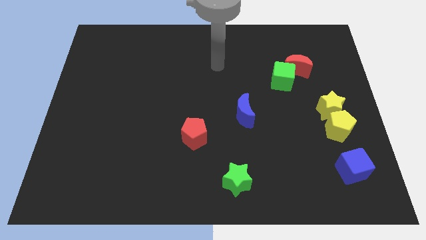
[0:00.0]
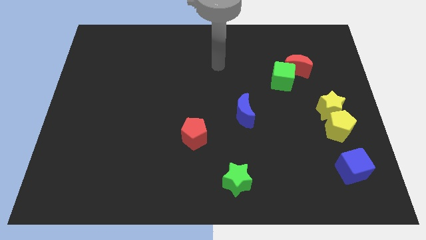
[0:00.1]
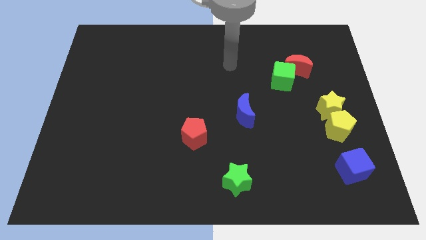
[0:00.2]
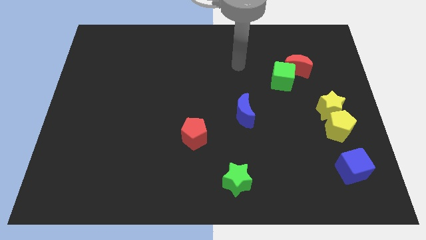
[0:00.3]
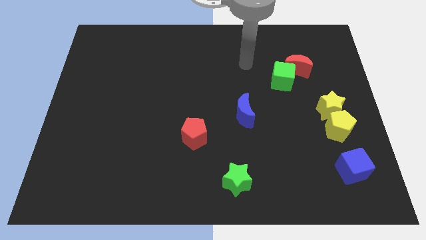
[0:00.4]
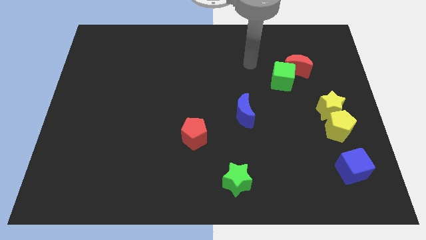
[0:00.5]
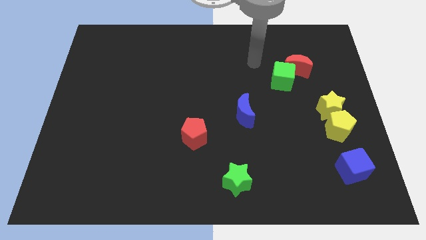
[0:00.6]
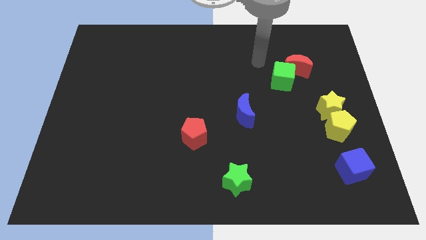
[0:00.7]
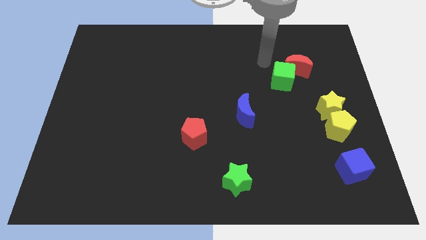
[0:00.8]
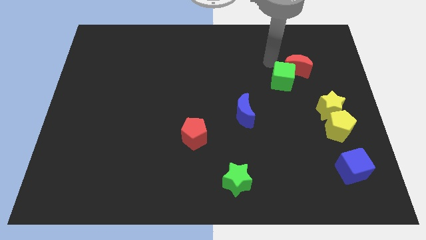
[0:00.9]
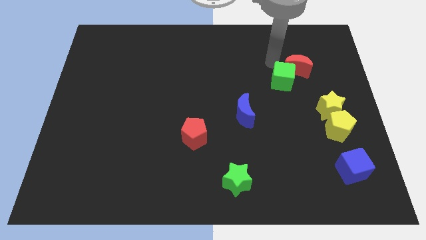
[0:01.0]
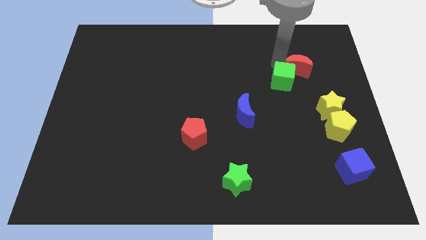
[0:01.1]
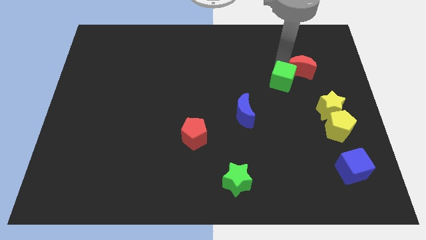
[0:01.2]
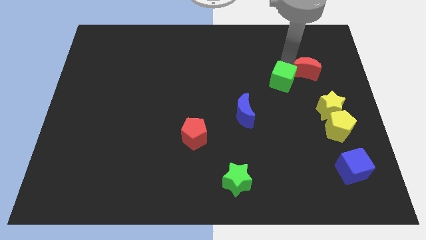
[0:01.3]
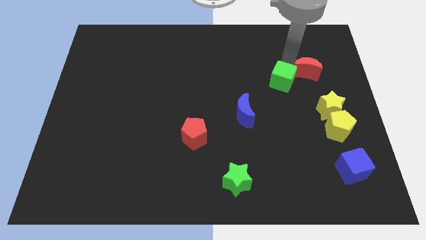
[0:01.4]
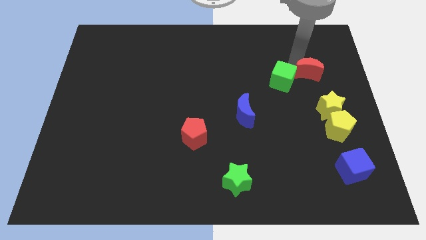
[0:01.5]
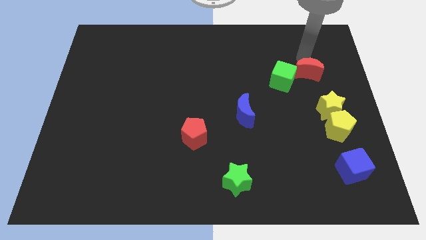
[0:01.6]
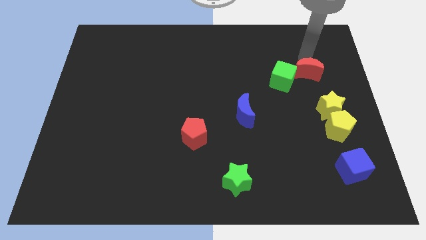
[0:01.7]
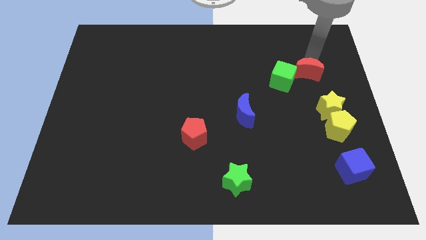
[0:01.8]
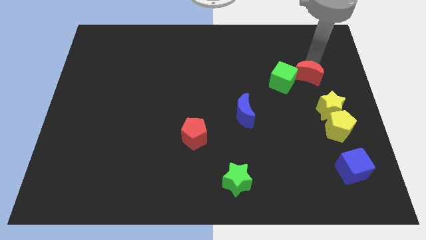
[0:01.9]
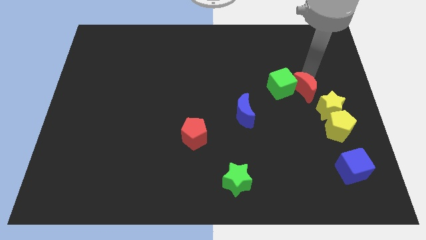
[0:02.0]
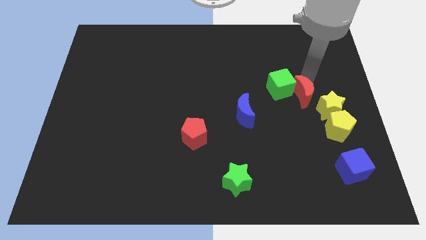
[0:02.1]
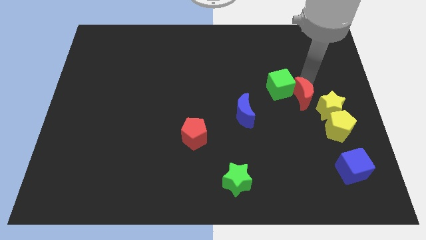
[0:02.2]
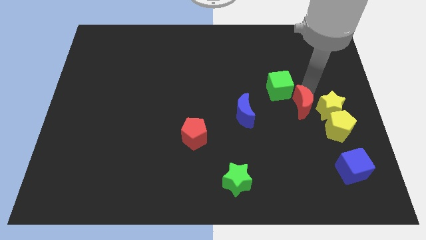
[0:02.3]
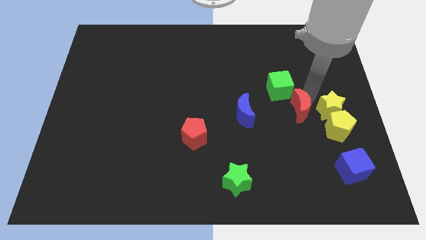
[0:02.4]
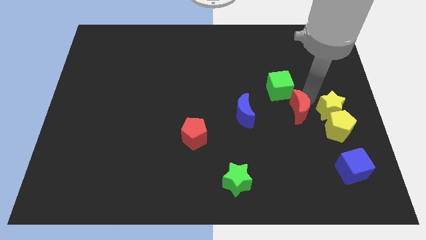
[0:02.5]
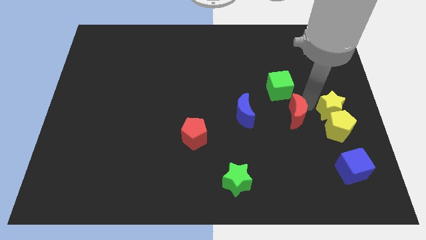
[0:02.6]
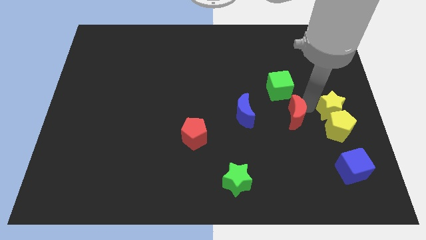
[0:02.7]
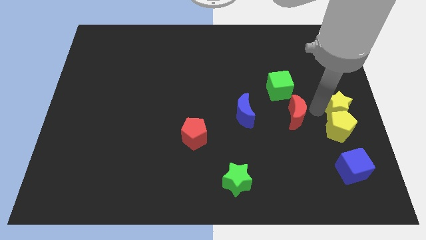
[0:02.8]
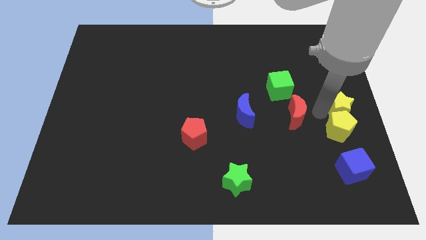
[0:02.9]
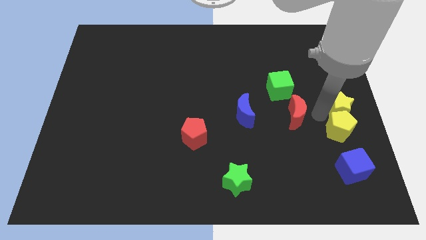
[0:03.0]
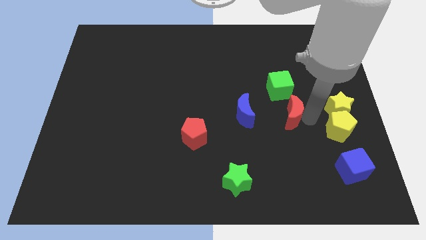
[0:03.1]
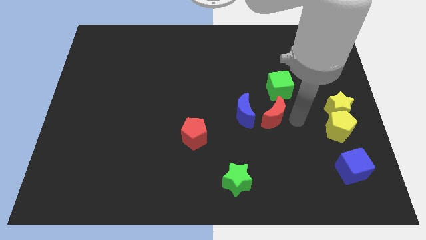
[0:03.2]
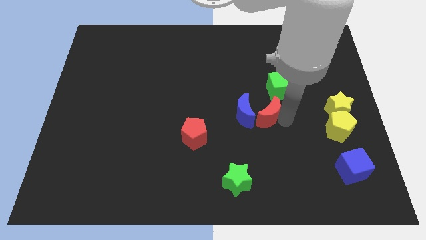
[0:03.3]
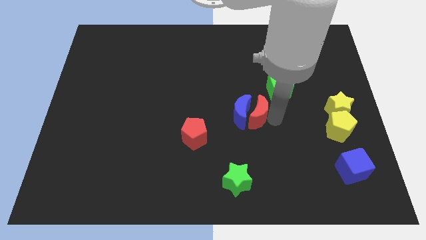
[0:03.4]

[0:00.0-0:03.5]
push red moon close to blue moon

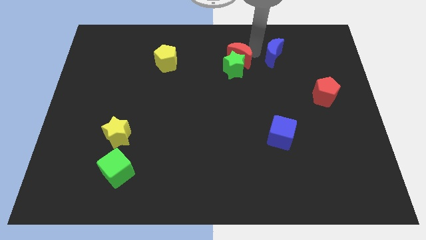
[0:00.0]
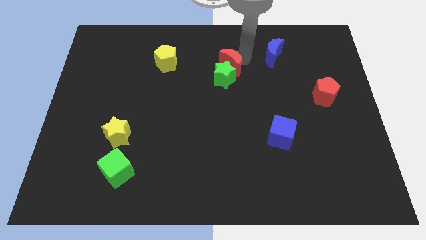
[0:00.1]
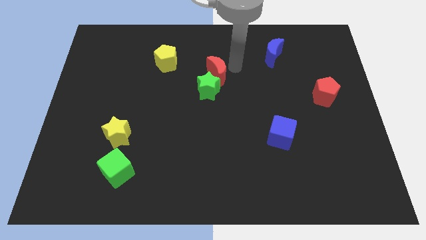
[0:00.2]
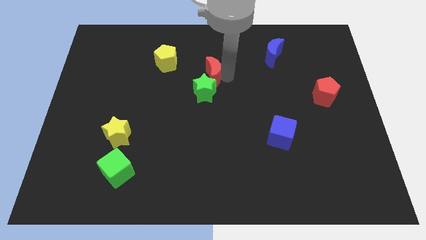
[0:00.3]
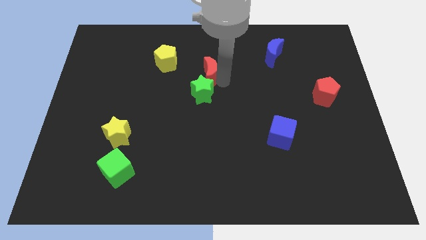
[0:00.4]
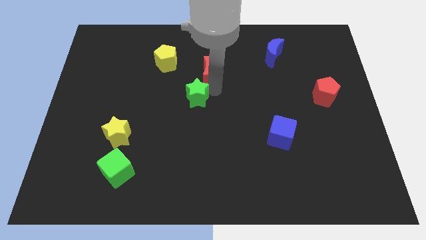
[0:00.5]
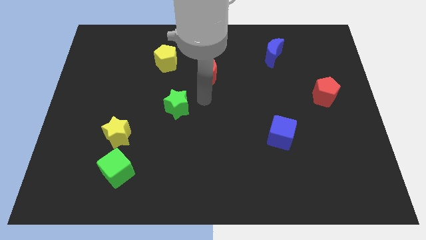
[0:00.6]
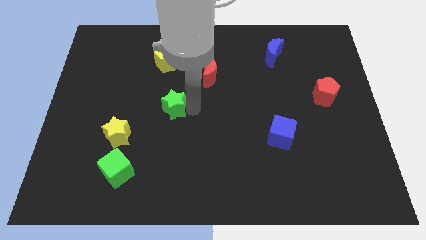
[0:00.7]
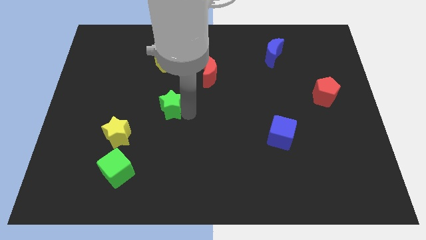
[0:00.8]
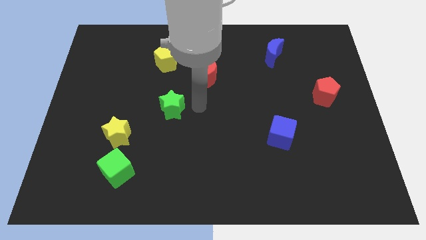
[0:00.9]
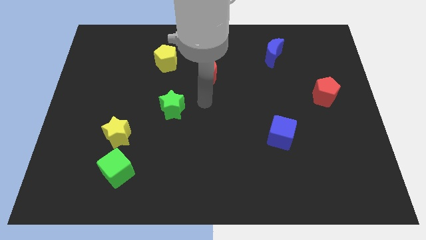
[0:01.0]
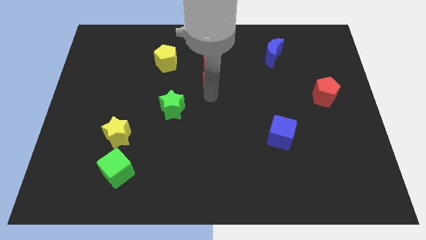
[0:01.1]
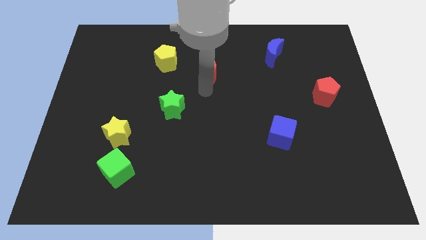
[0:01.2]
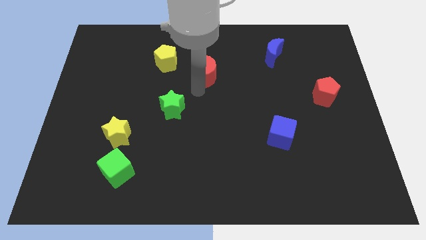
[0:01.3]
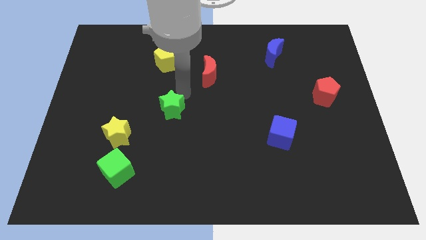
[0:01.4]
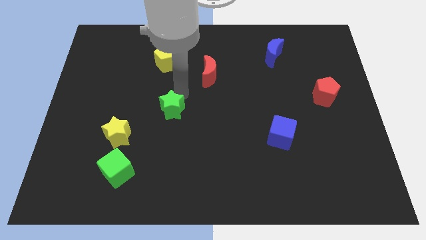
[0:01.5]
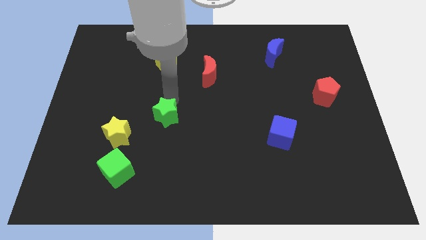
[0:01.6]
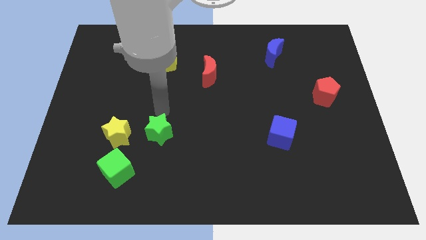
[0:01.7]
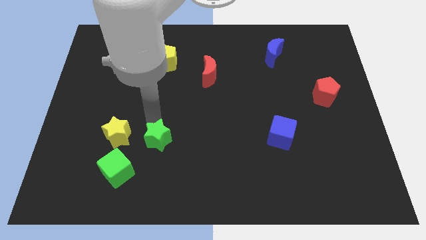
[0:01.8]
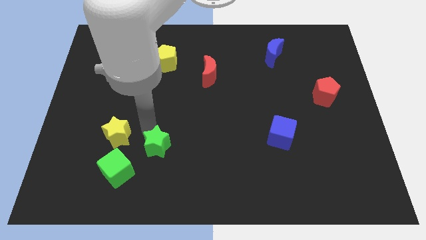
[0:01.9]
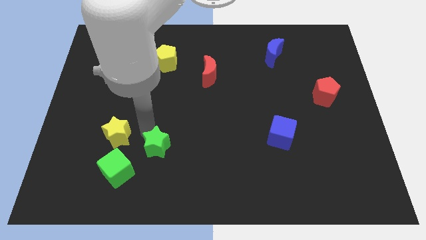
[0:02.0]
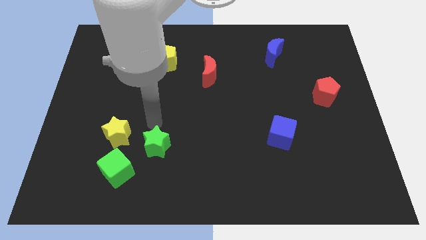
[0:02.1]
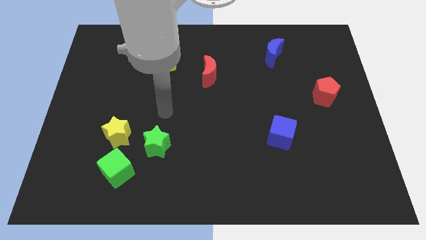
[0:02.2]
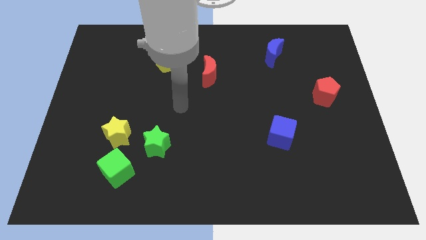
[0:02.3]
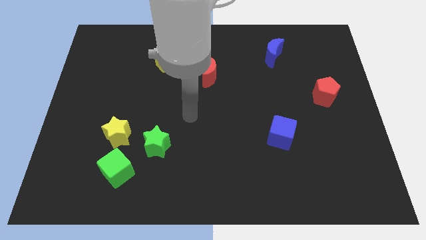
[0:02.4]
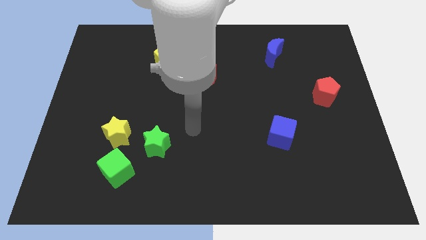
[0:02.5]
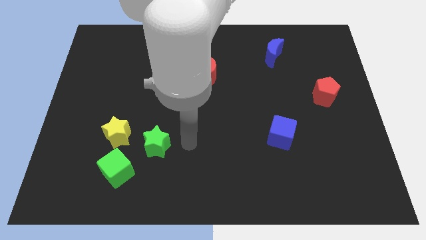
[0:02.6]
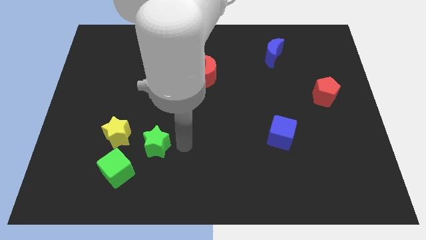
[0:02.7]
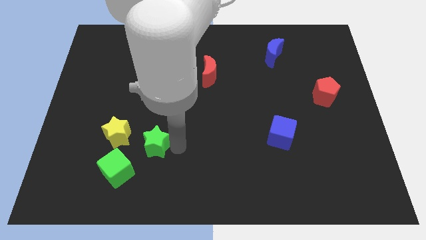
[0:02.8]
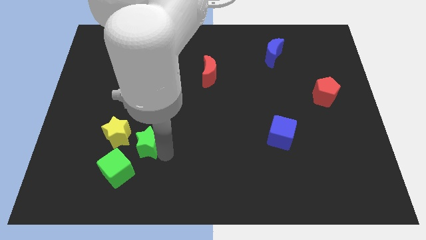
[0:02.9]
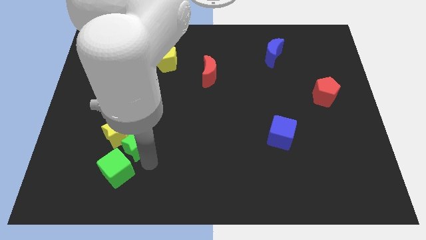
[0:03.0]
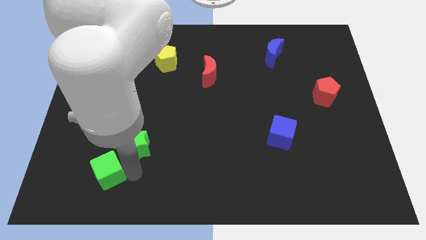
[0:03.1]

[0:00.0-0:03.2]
push the green star to the top right of the green cube

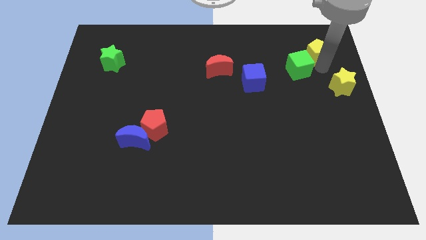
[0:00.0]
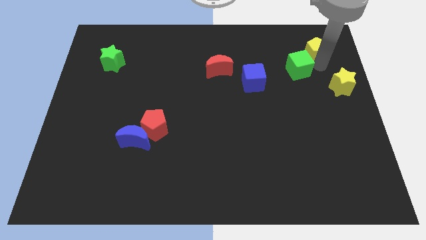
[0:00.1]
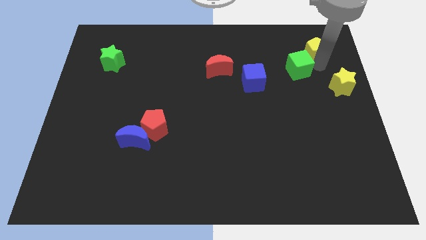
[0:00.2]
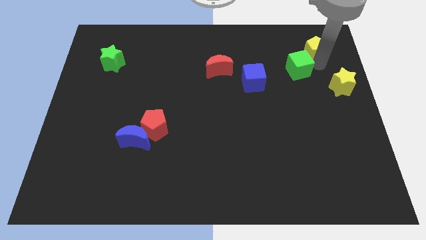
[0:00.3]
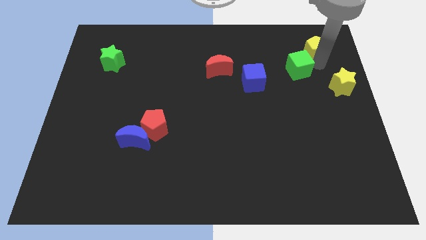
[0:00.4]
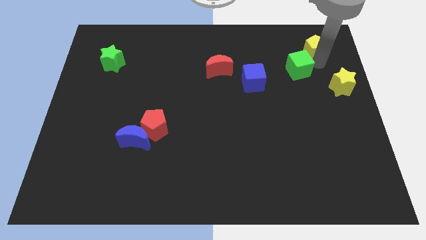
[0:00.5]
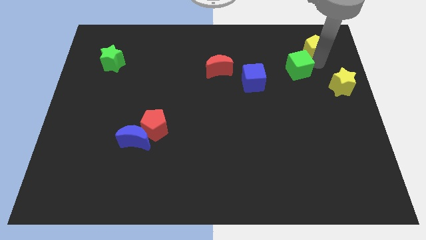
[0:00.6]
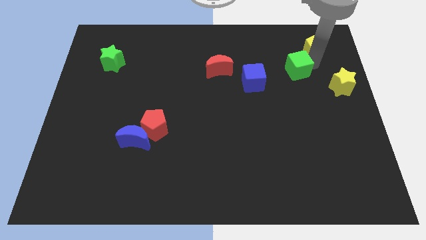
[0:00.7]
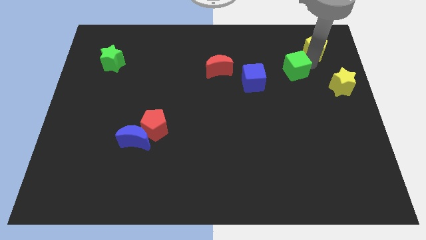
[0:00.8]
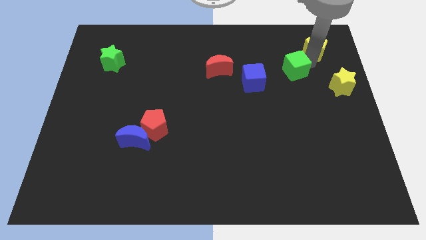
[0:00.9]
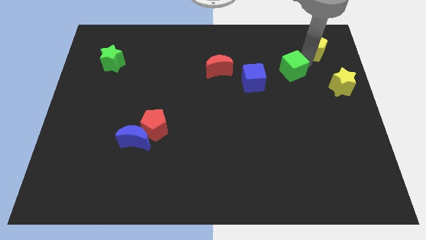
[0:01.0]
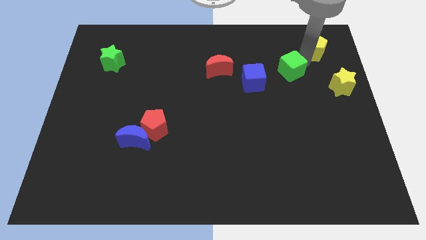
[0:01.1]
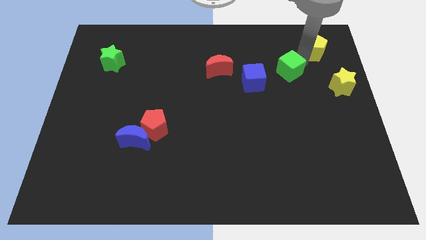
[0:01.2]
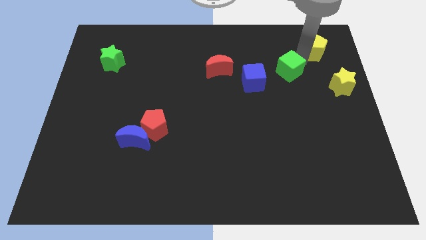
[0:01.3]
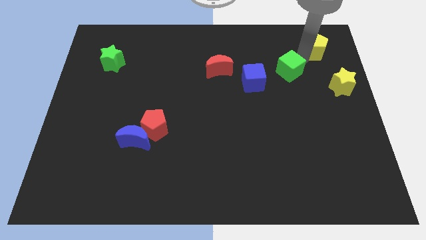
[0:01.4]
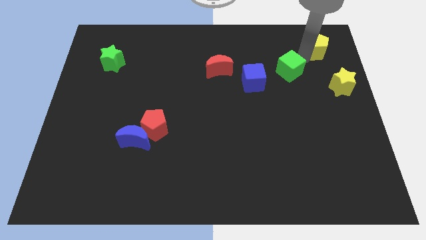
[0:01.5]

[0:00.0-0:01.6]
separate yellow pentagon and the green star

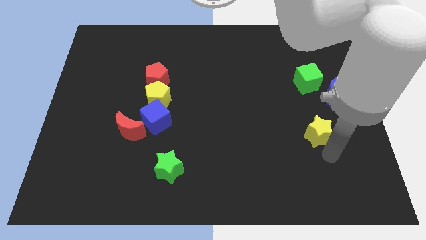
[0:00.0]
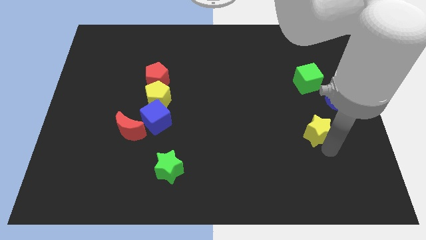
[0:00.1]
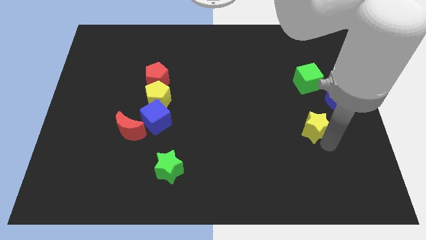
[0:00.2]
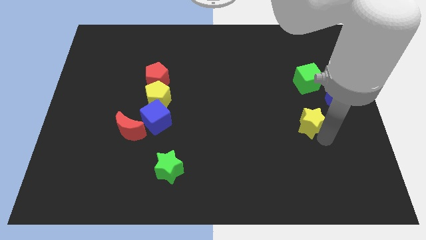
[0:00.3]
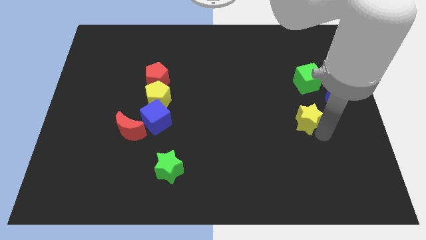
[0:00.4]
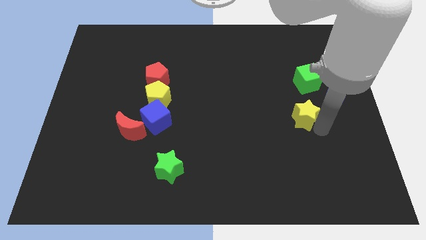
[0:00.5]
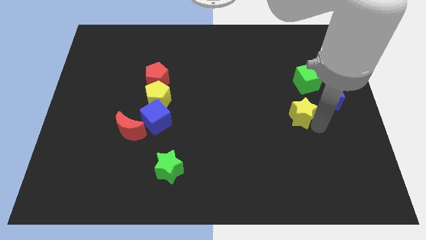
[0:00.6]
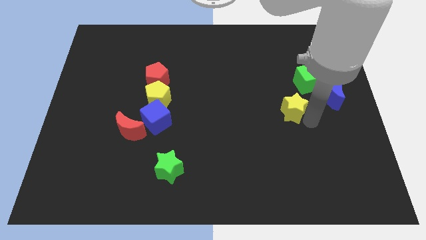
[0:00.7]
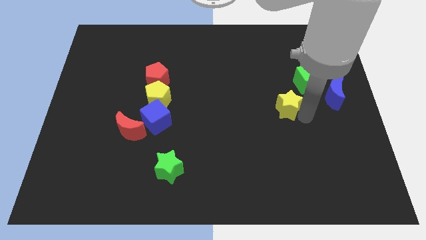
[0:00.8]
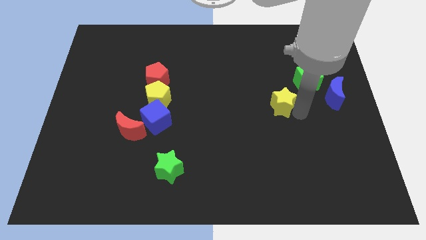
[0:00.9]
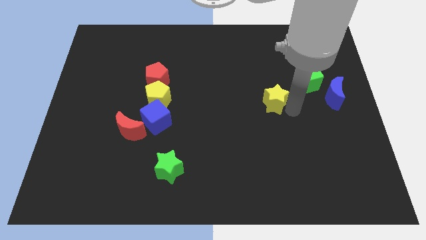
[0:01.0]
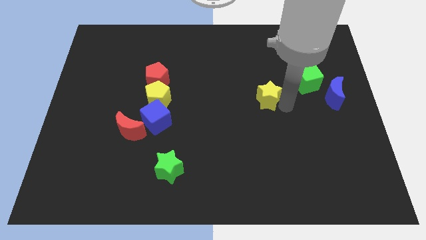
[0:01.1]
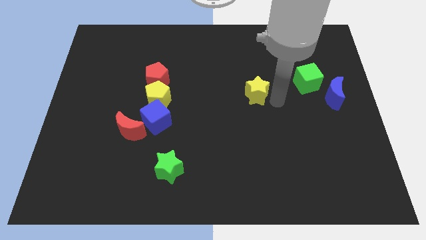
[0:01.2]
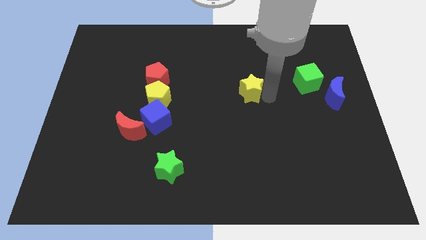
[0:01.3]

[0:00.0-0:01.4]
push the yellow star towards the center
